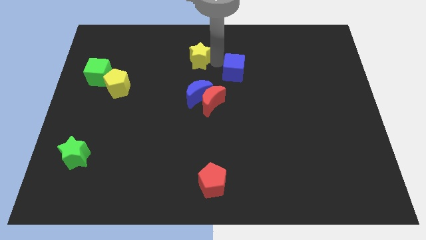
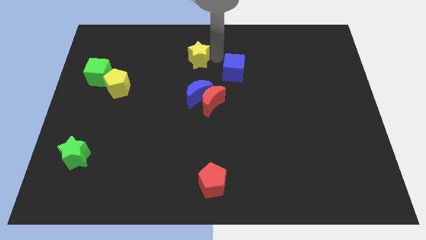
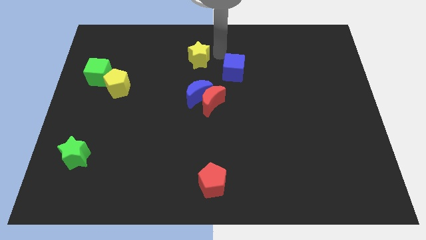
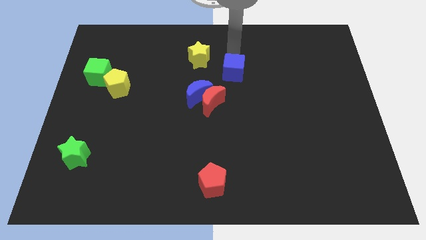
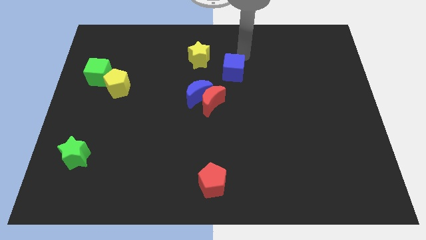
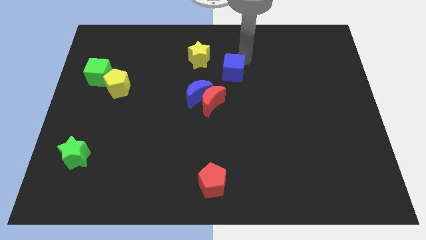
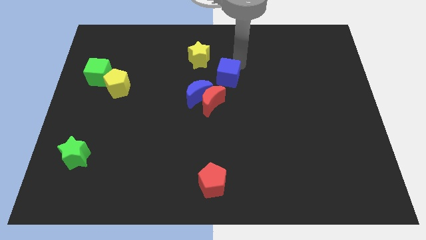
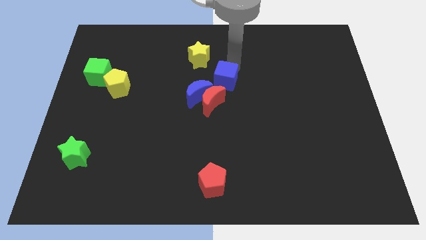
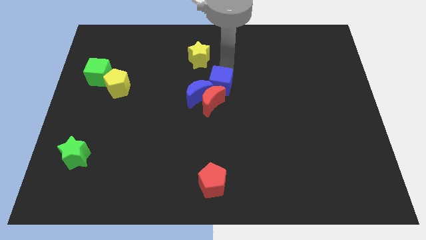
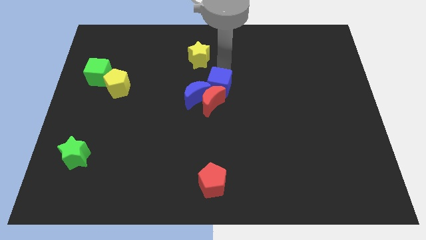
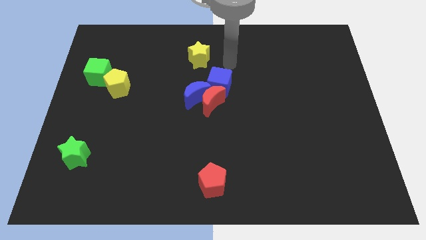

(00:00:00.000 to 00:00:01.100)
push blue cube into red nad blue moon

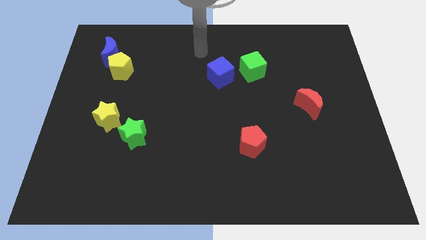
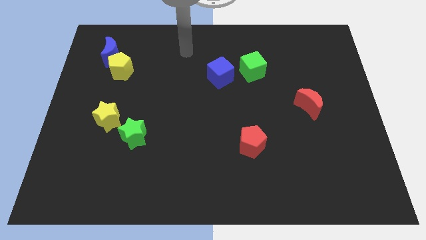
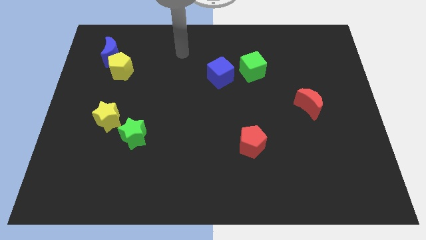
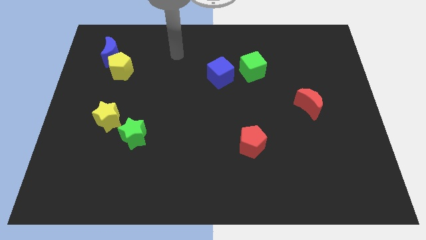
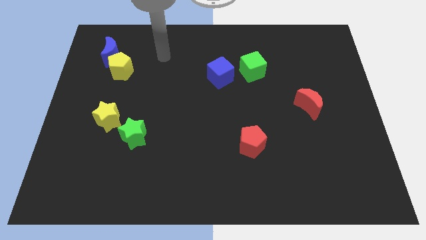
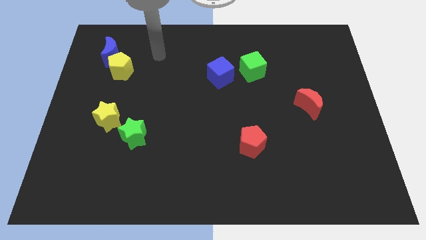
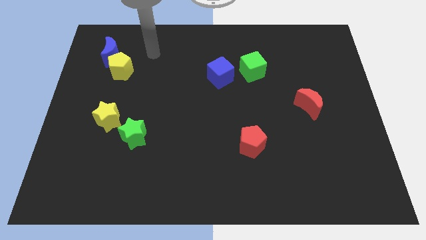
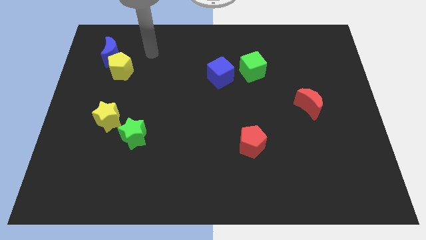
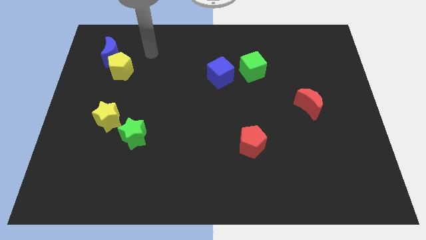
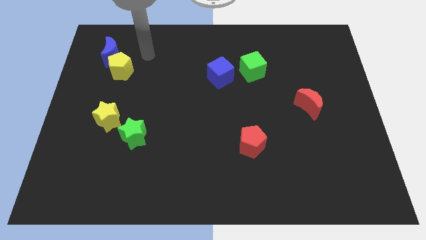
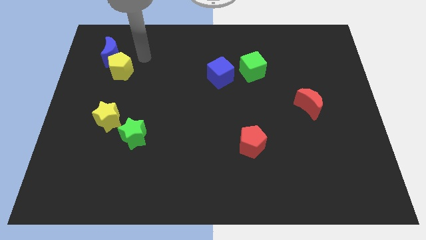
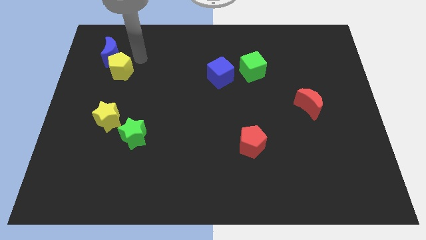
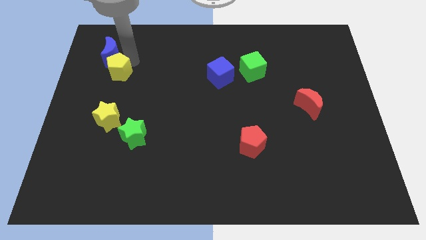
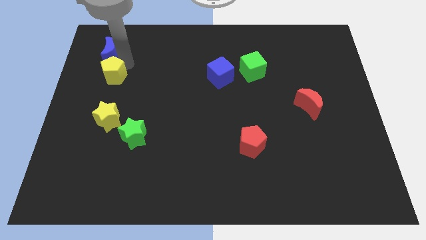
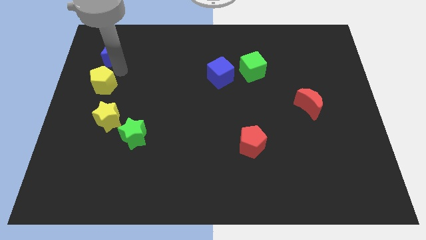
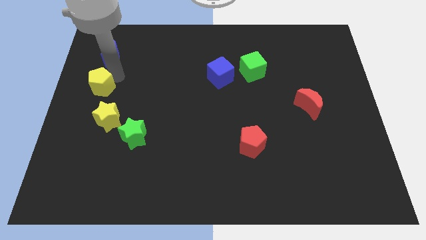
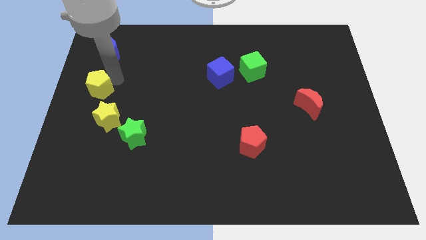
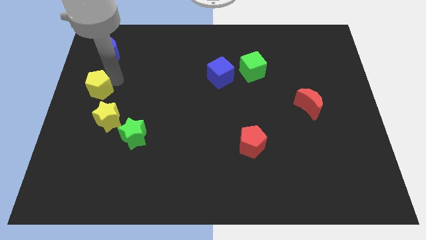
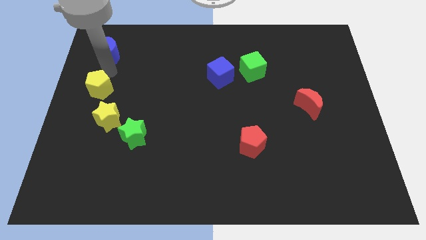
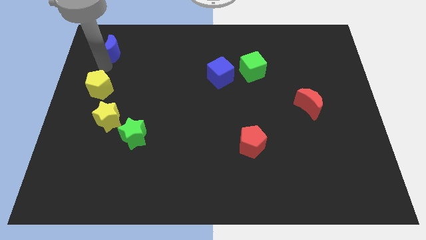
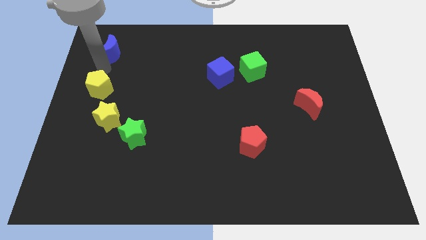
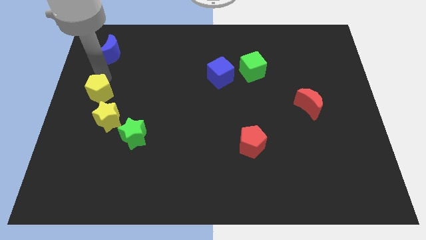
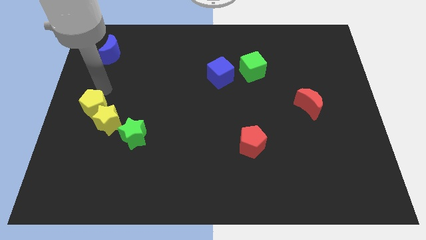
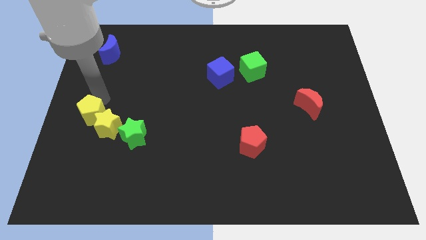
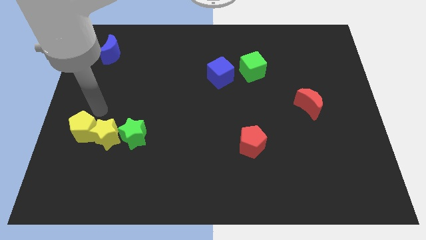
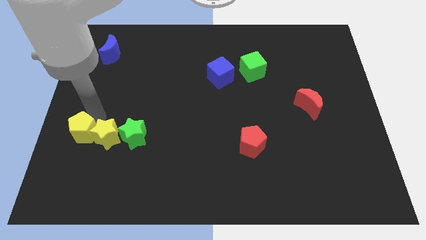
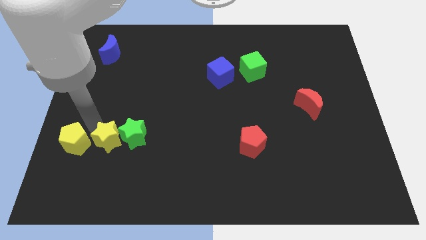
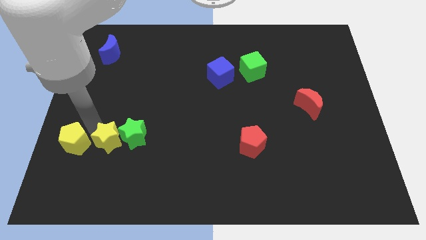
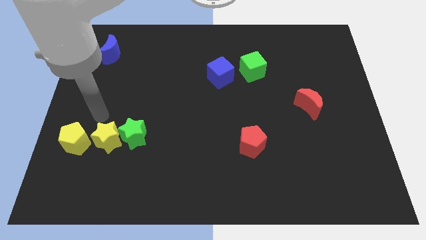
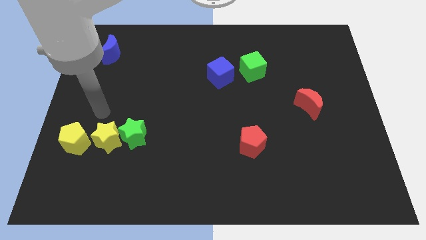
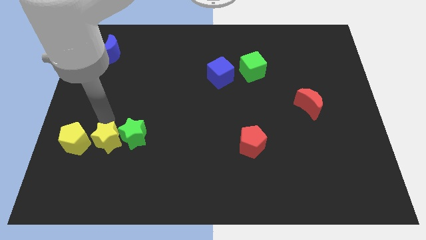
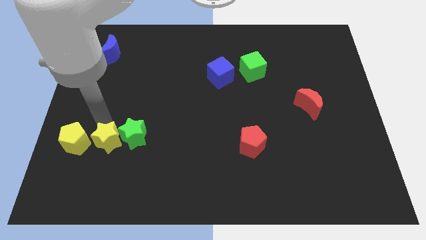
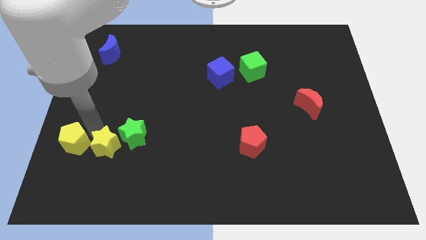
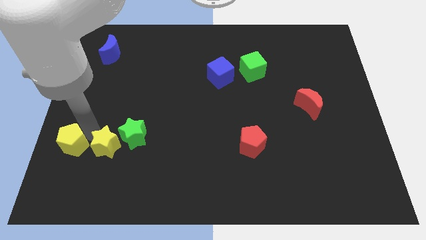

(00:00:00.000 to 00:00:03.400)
move the yellow blocks to the left side of the green star

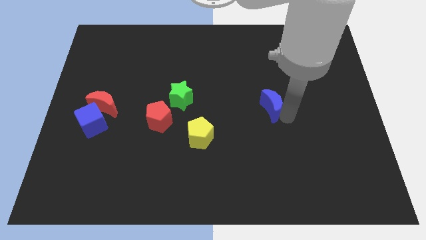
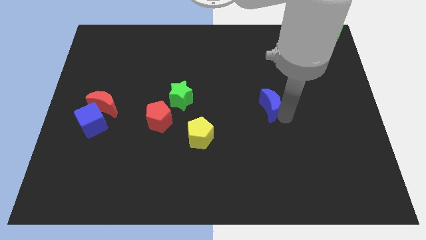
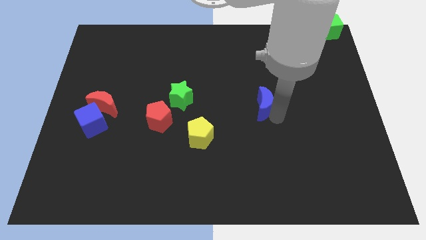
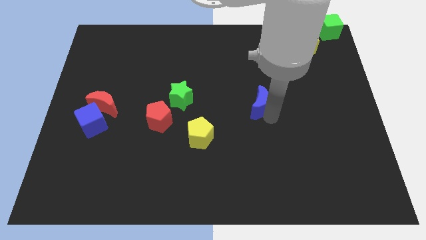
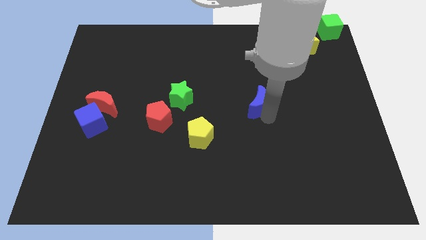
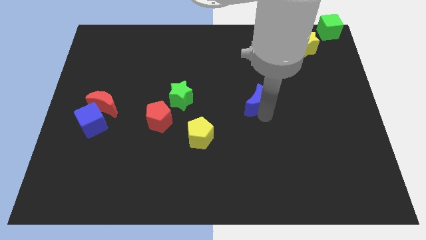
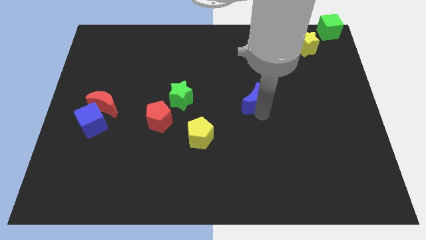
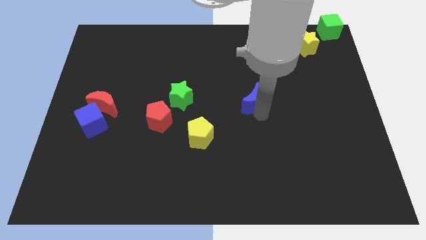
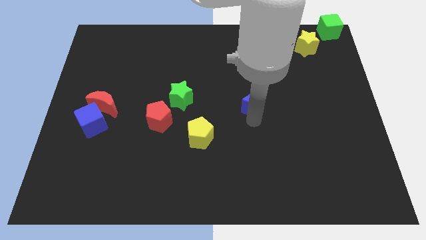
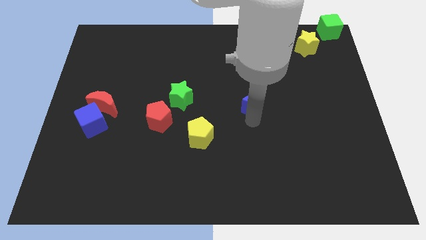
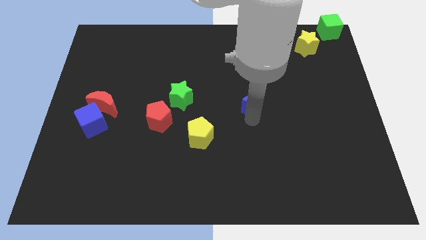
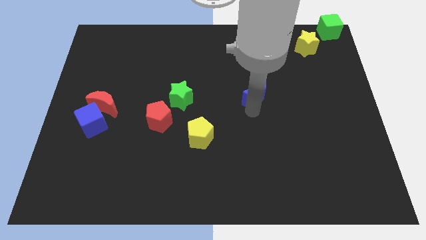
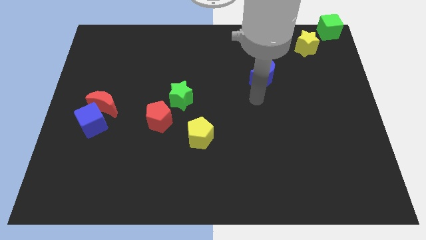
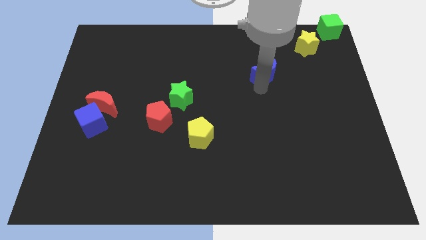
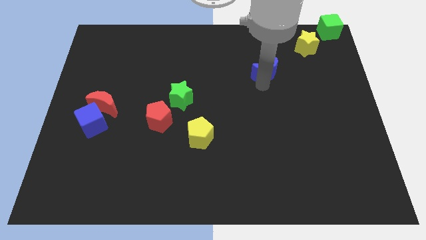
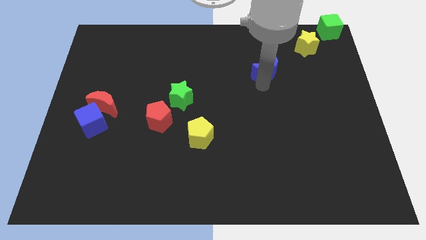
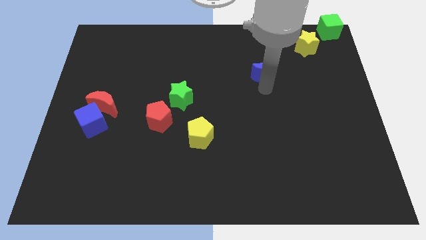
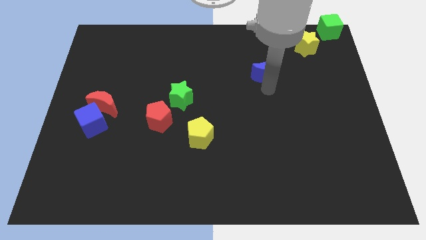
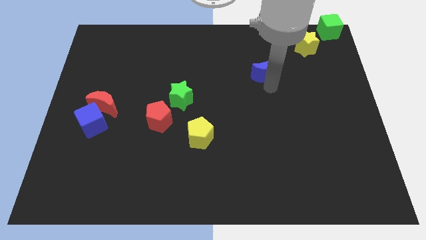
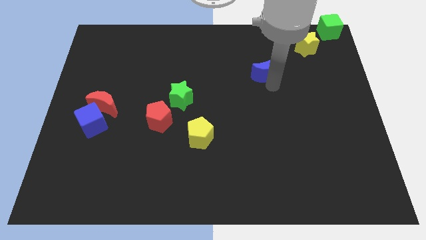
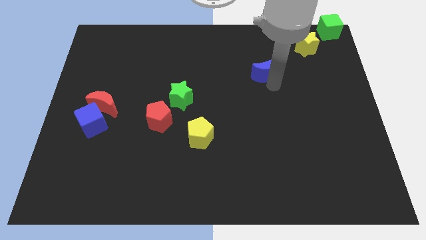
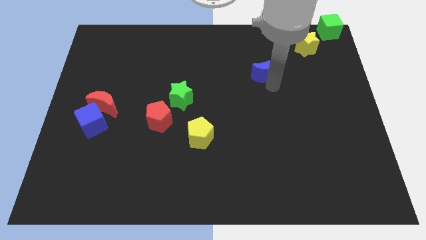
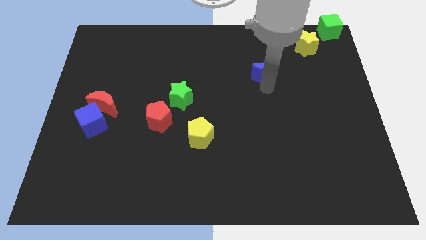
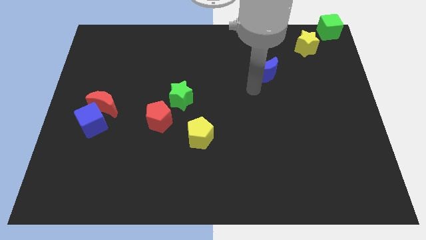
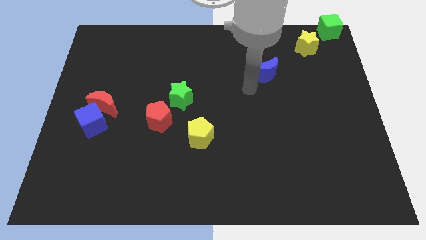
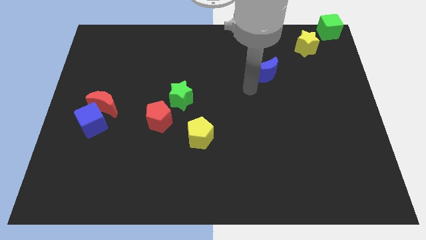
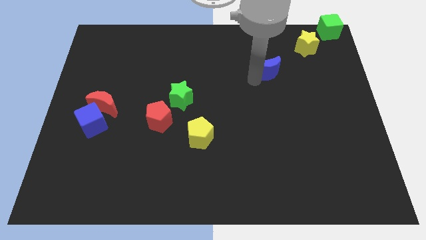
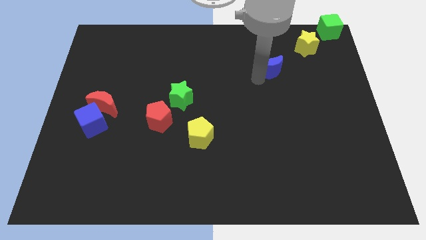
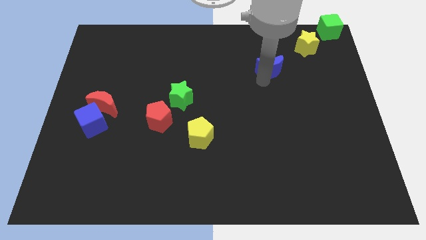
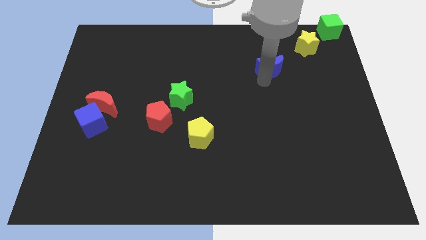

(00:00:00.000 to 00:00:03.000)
move the blue crescent towards the yellow star

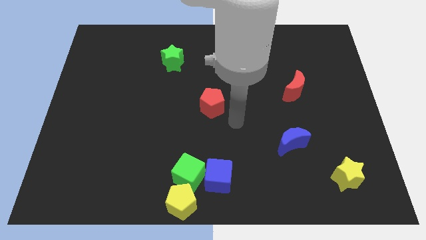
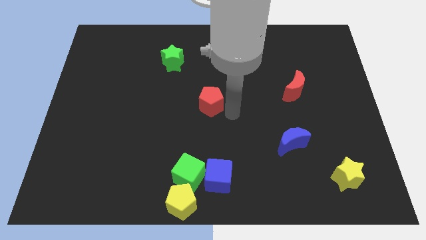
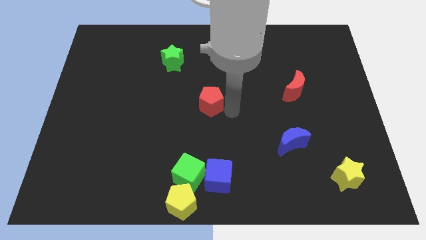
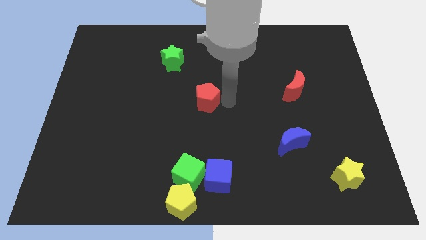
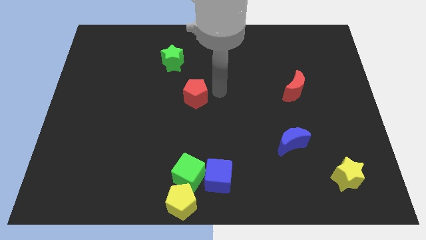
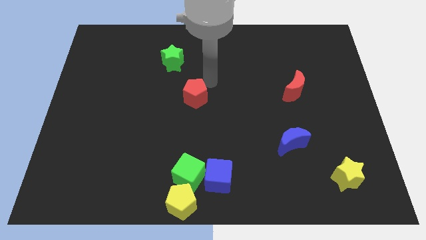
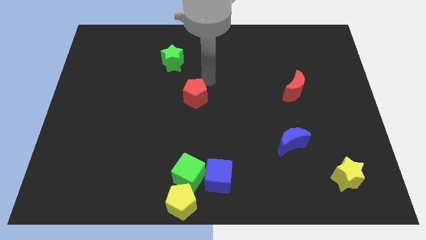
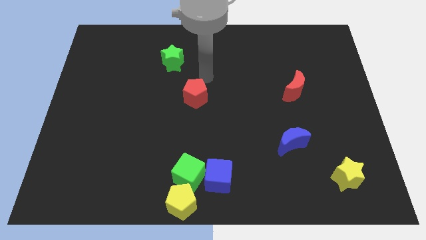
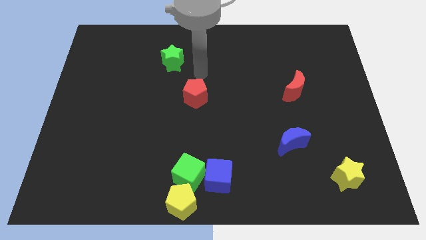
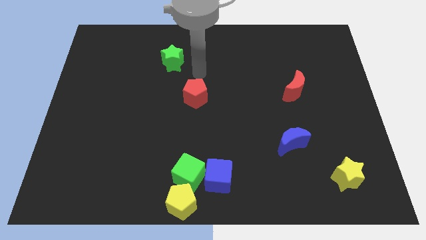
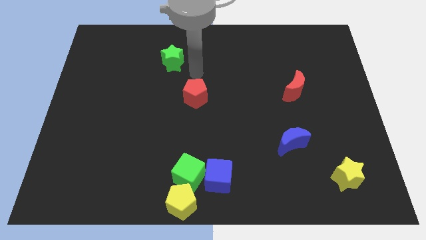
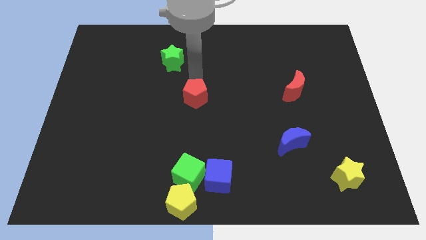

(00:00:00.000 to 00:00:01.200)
push red pentagon above green cube

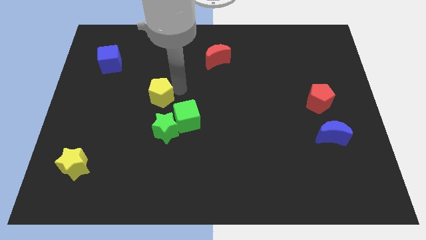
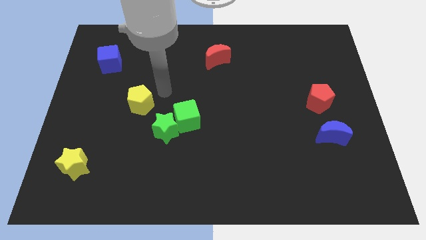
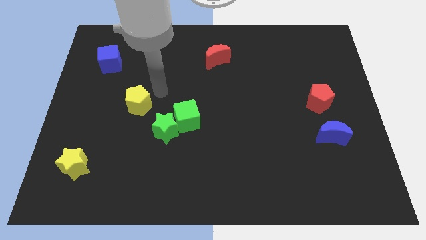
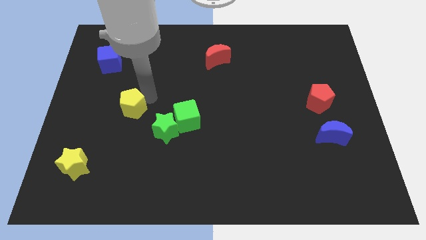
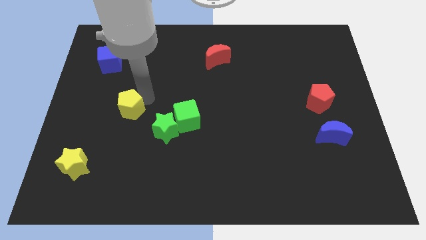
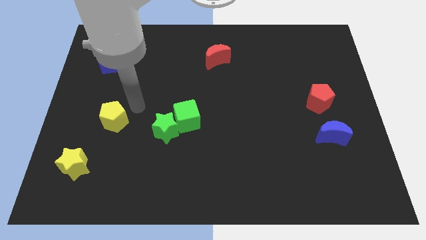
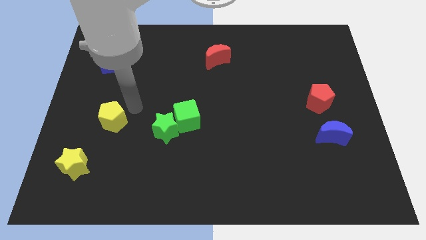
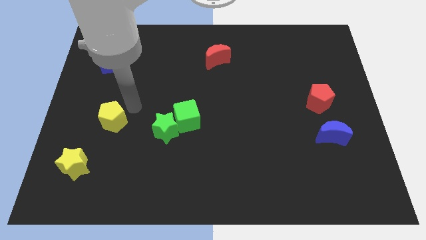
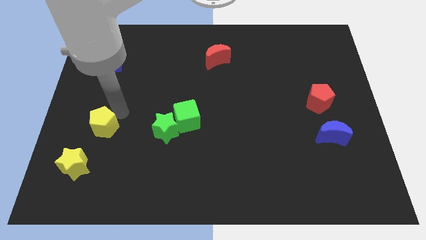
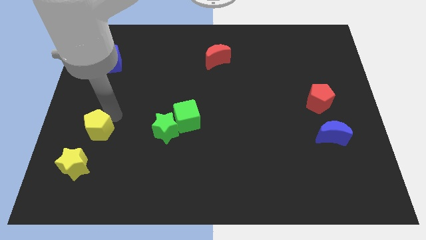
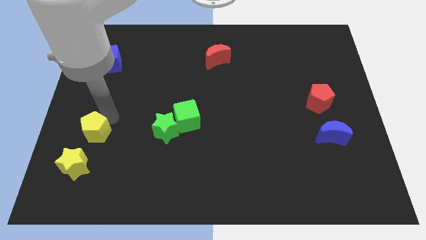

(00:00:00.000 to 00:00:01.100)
push yellow pentagon towards yellow star
